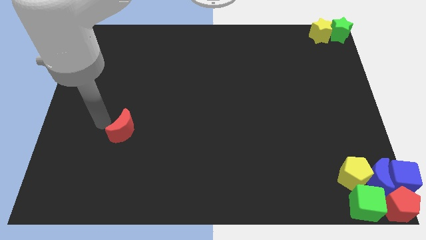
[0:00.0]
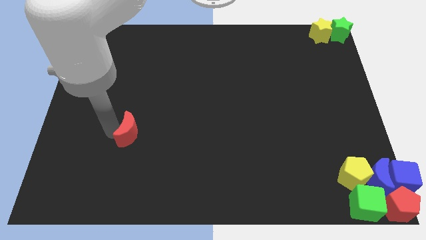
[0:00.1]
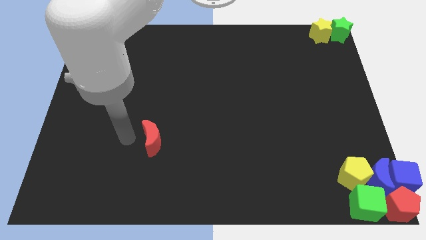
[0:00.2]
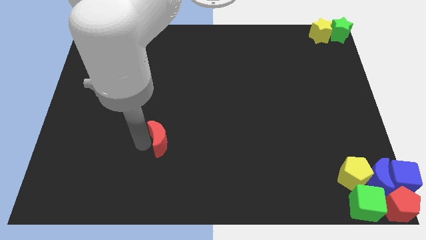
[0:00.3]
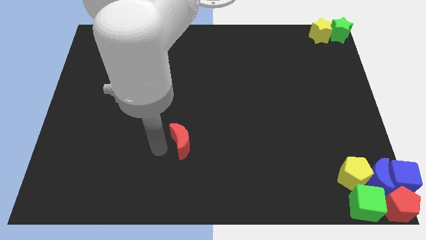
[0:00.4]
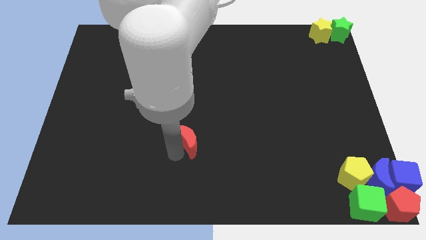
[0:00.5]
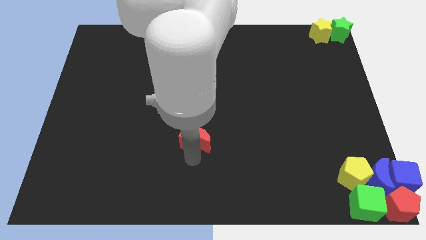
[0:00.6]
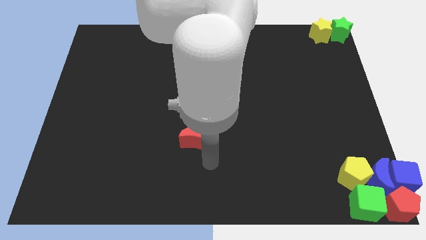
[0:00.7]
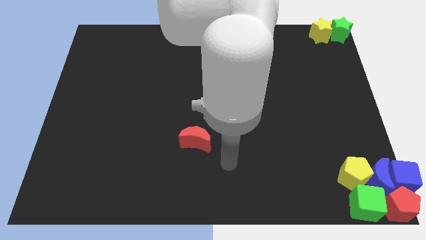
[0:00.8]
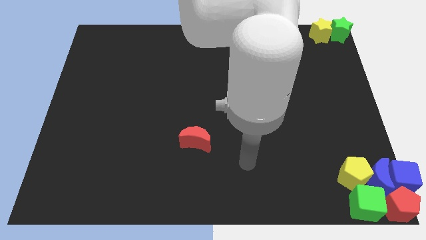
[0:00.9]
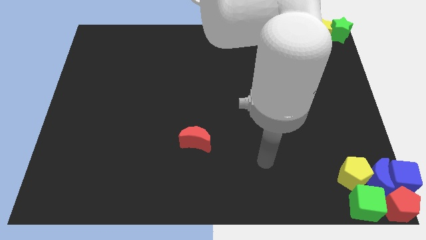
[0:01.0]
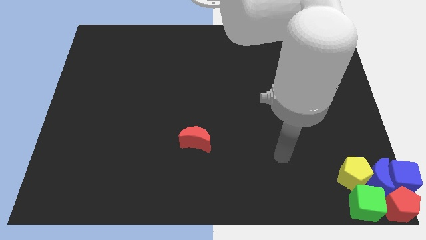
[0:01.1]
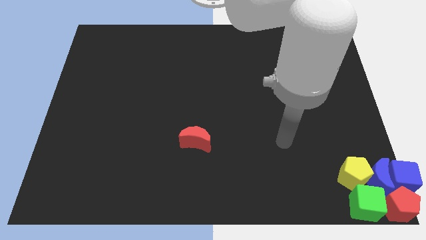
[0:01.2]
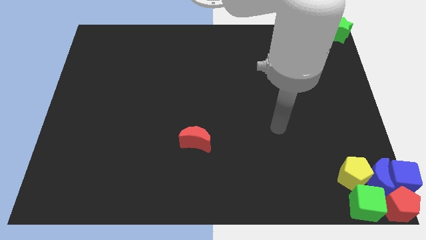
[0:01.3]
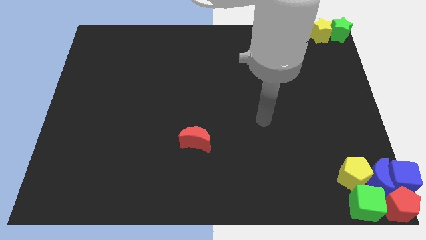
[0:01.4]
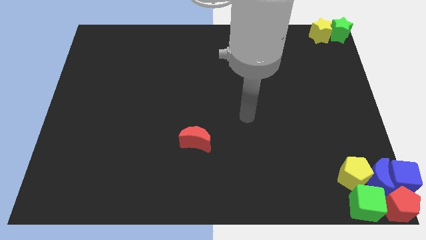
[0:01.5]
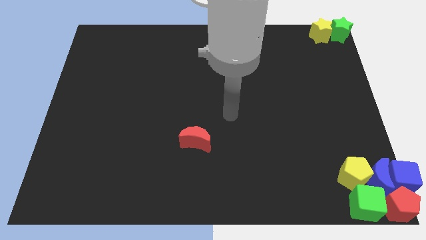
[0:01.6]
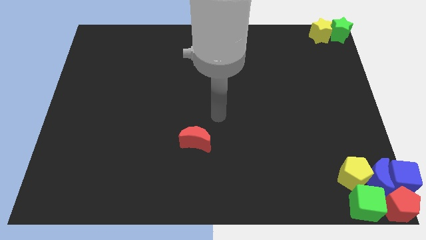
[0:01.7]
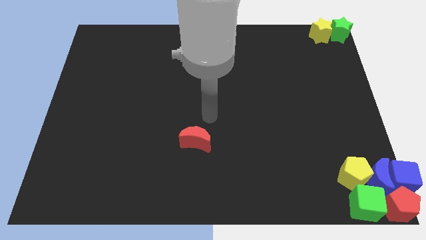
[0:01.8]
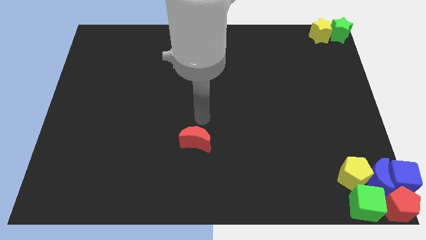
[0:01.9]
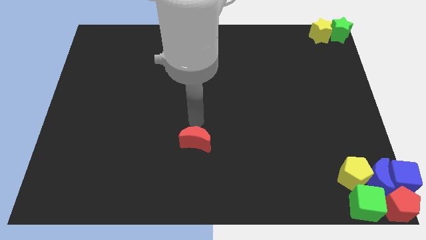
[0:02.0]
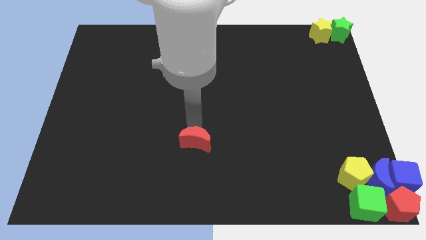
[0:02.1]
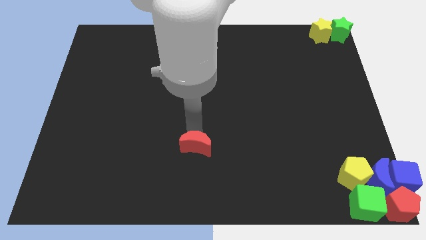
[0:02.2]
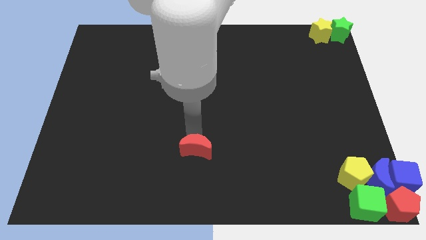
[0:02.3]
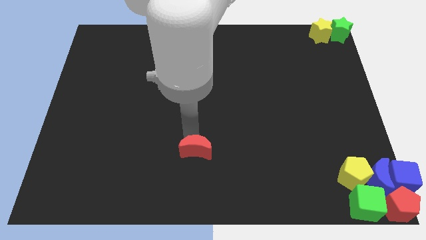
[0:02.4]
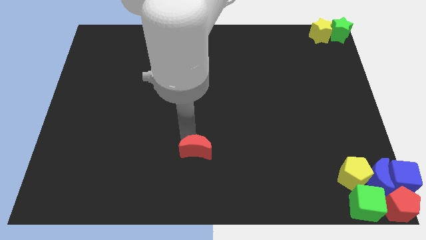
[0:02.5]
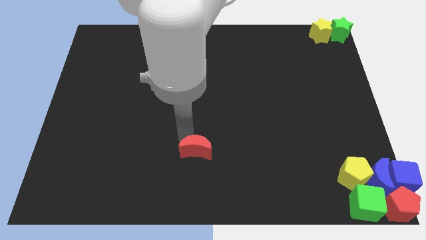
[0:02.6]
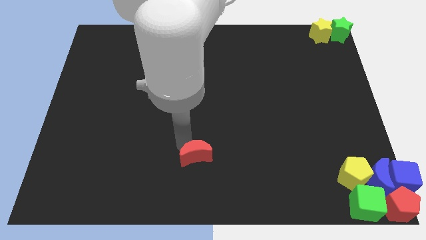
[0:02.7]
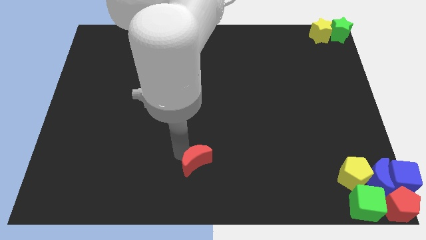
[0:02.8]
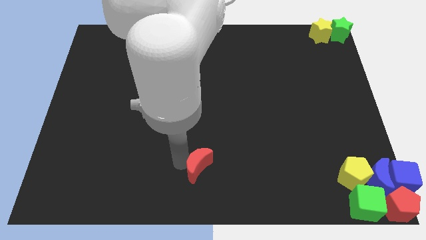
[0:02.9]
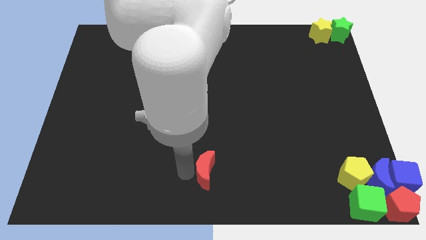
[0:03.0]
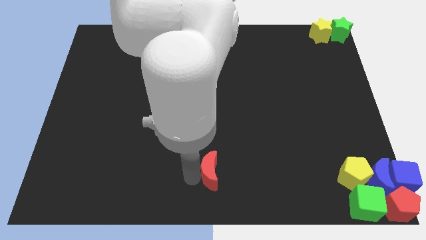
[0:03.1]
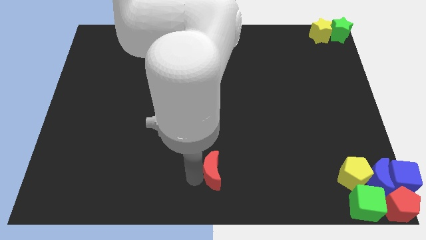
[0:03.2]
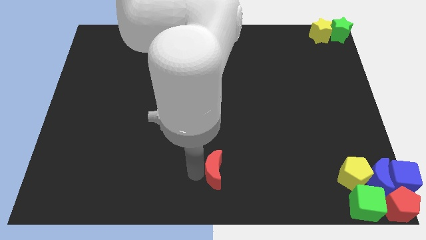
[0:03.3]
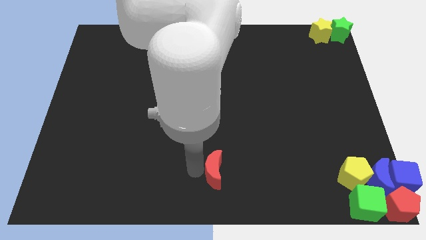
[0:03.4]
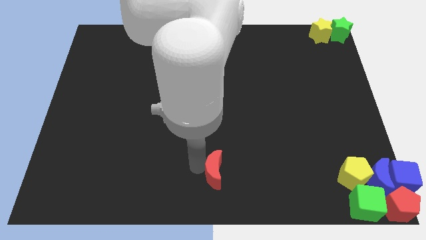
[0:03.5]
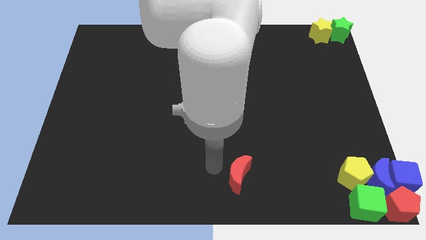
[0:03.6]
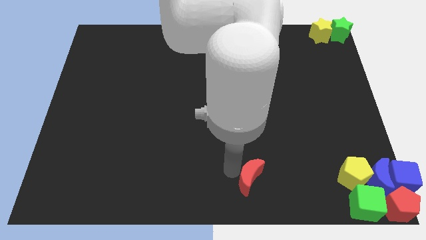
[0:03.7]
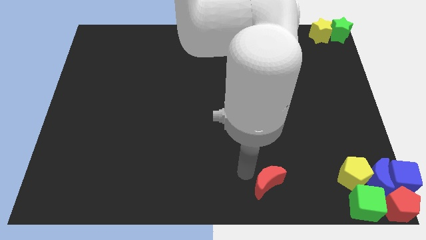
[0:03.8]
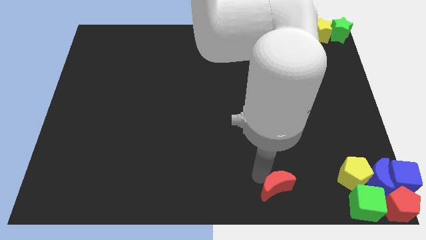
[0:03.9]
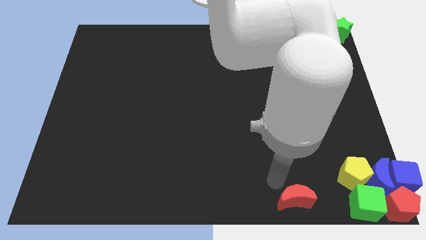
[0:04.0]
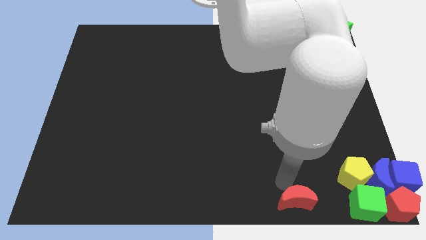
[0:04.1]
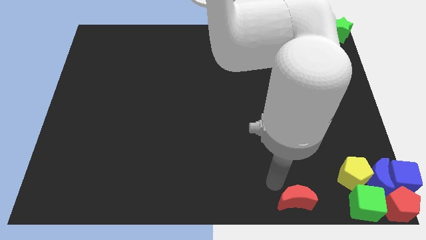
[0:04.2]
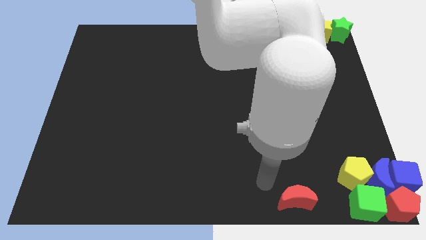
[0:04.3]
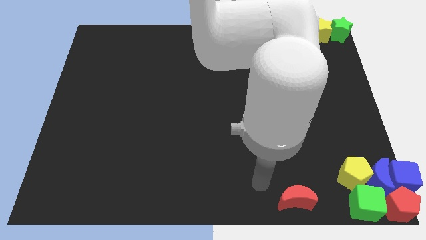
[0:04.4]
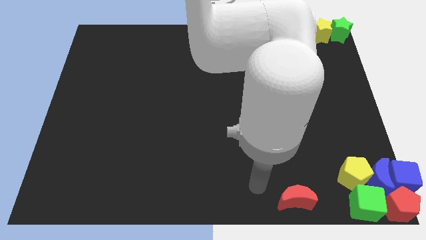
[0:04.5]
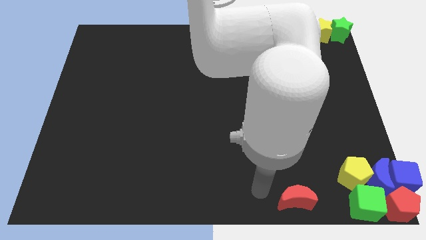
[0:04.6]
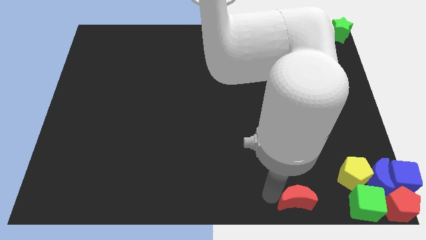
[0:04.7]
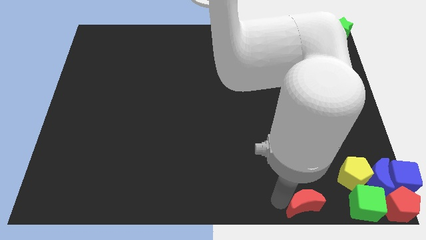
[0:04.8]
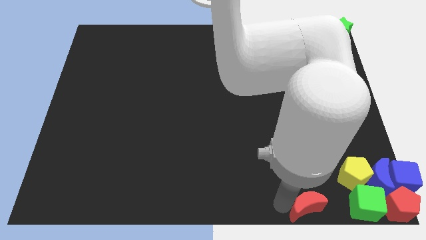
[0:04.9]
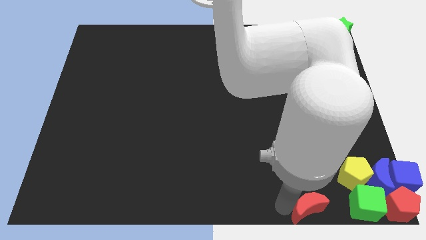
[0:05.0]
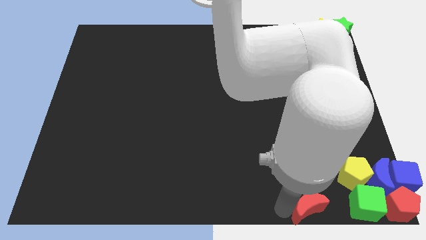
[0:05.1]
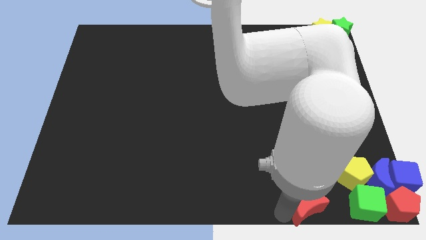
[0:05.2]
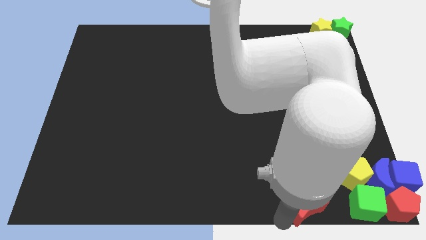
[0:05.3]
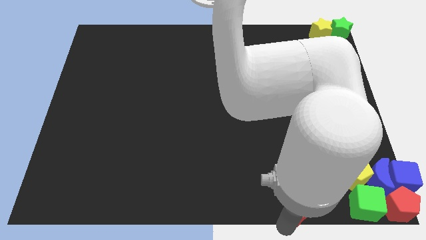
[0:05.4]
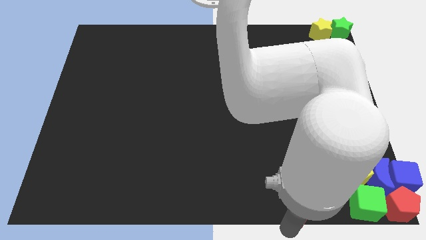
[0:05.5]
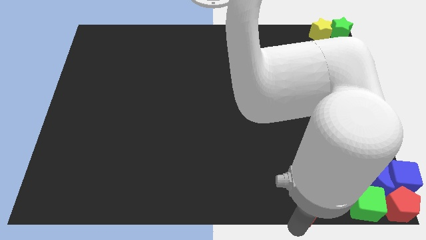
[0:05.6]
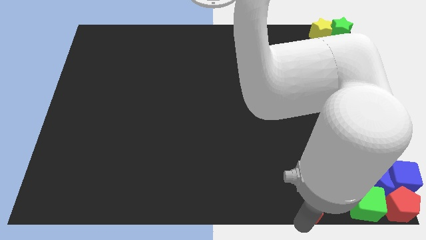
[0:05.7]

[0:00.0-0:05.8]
place the red moon left to the green cube

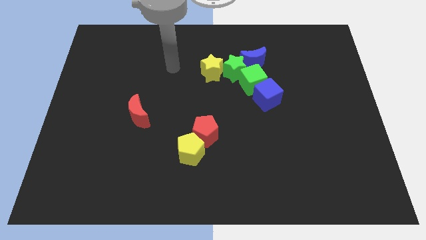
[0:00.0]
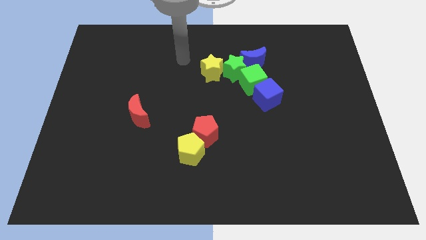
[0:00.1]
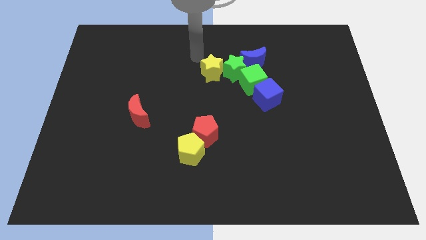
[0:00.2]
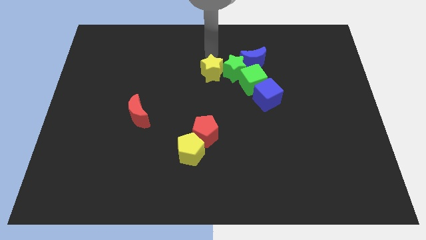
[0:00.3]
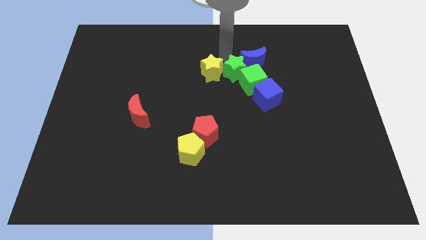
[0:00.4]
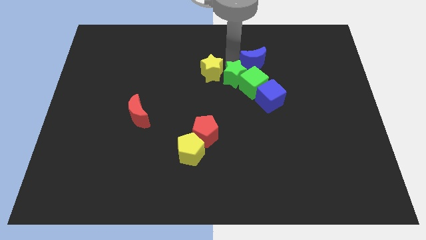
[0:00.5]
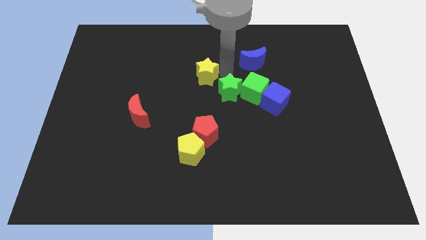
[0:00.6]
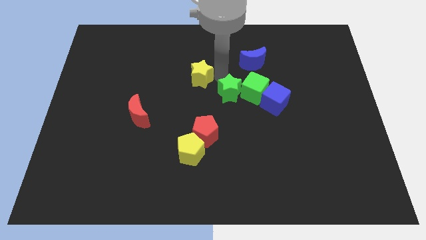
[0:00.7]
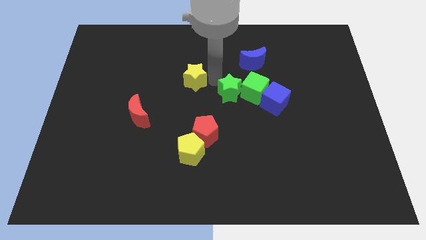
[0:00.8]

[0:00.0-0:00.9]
separate yellow star with green star

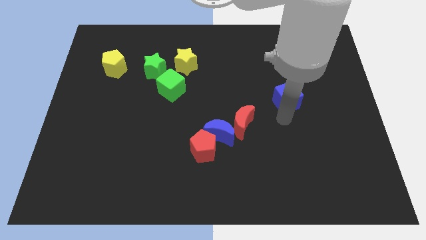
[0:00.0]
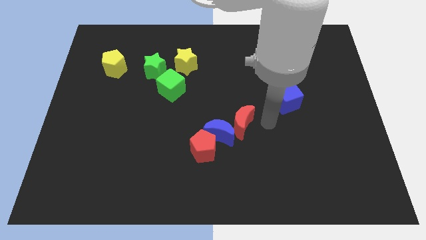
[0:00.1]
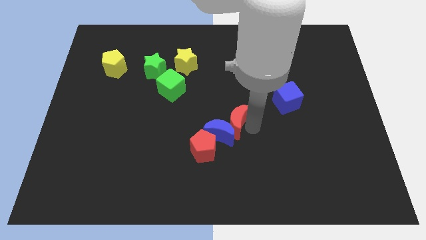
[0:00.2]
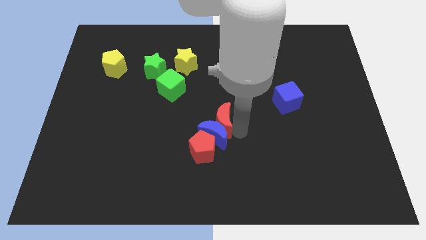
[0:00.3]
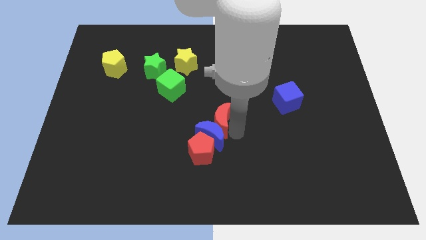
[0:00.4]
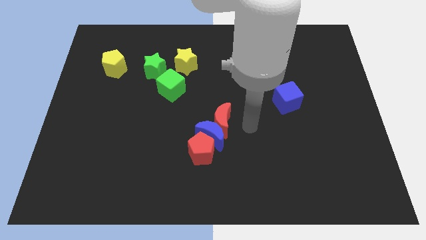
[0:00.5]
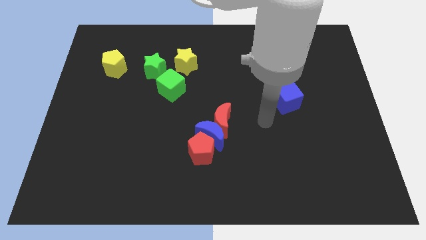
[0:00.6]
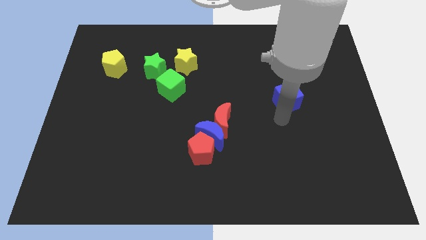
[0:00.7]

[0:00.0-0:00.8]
push a group of blocks to the center

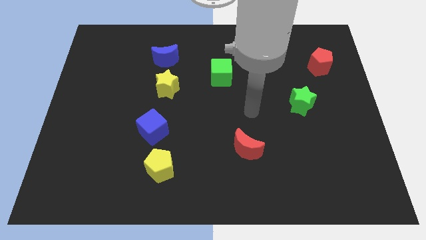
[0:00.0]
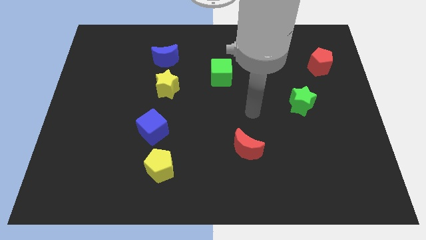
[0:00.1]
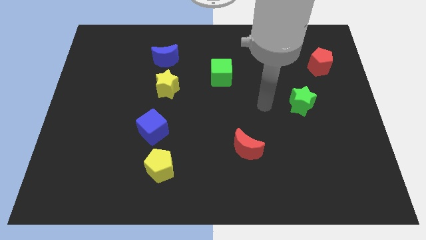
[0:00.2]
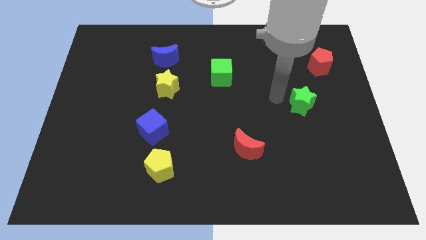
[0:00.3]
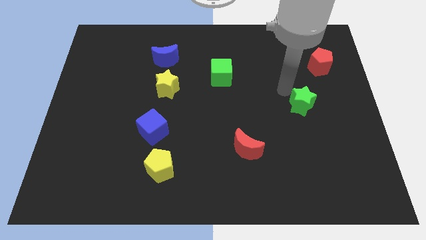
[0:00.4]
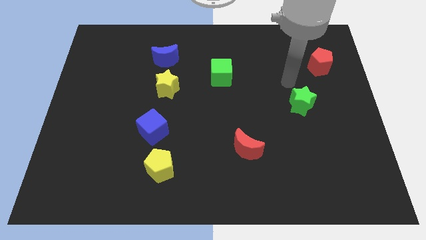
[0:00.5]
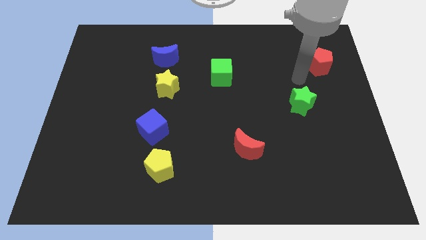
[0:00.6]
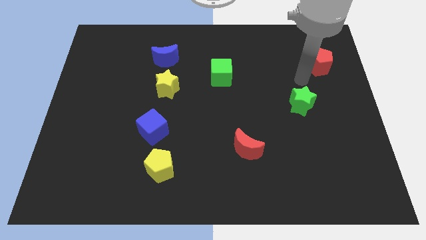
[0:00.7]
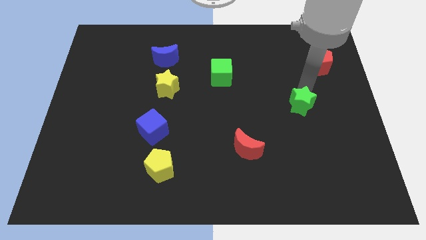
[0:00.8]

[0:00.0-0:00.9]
point the arm above the green star

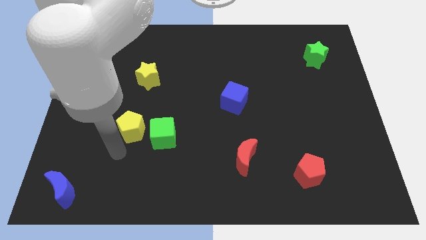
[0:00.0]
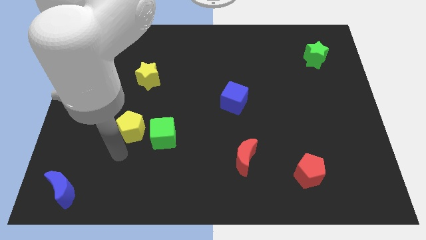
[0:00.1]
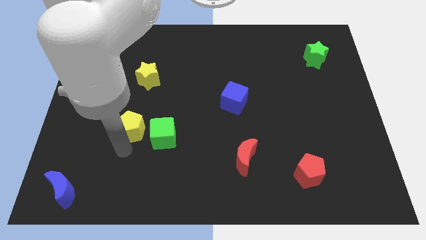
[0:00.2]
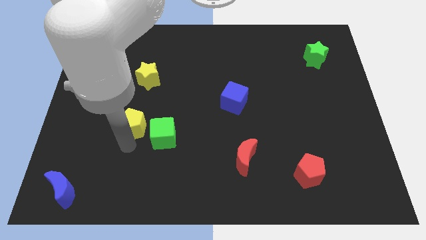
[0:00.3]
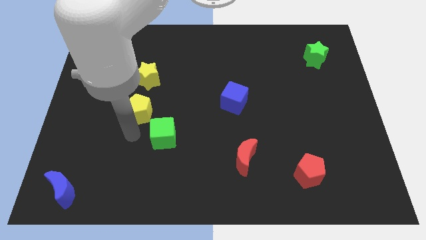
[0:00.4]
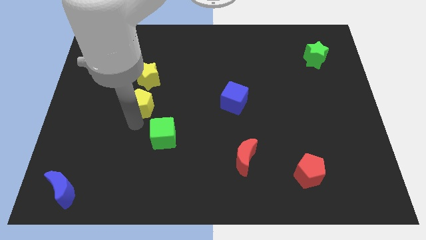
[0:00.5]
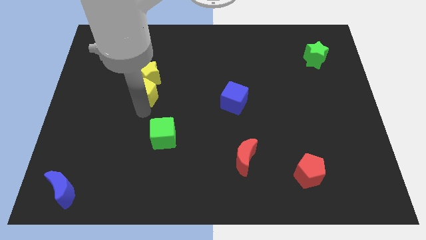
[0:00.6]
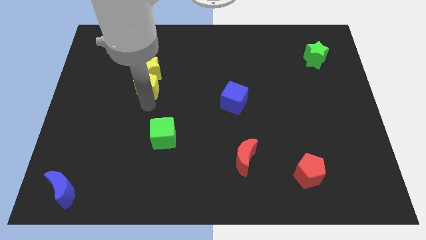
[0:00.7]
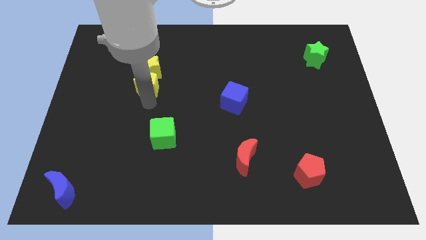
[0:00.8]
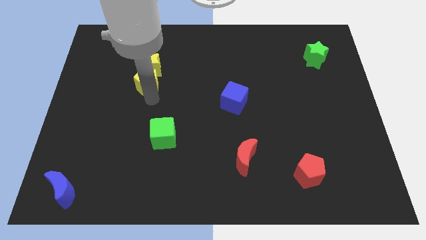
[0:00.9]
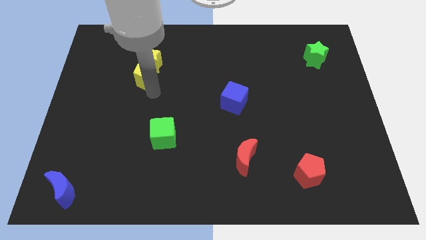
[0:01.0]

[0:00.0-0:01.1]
place yellow pentagon to the bottom of the yellow star
